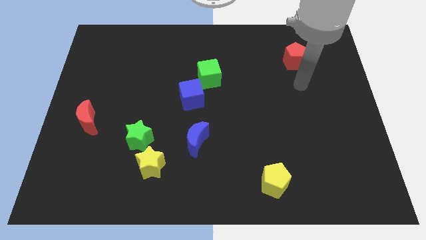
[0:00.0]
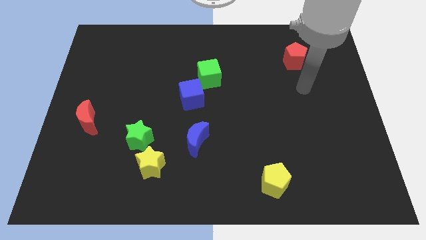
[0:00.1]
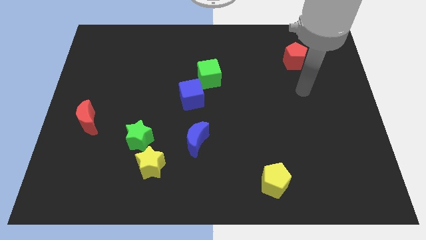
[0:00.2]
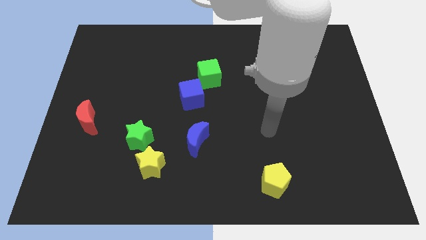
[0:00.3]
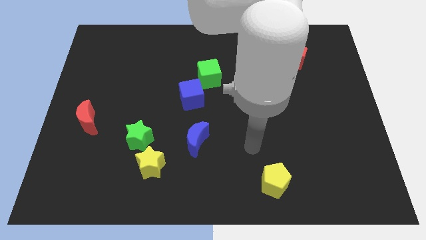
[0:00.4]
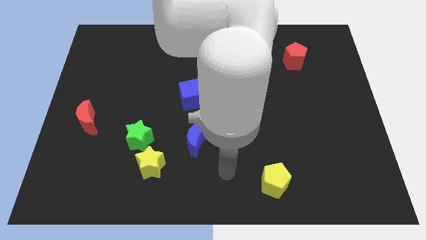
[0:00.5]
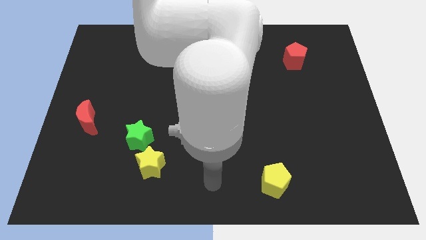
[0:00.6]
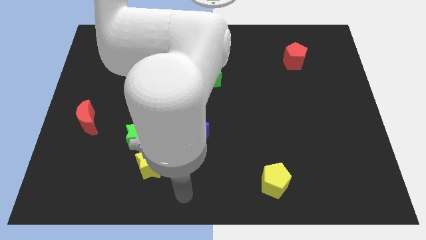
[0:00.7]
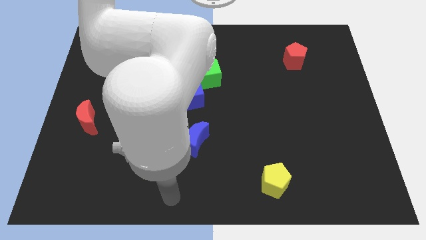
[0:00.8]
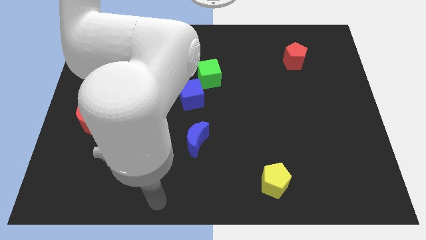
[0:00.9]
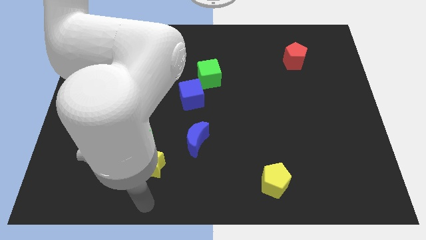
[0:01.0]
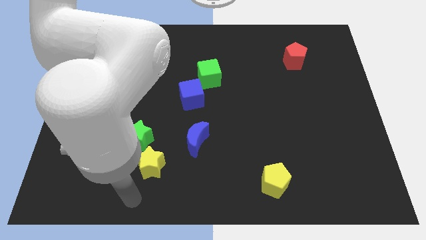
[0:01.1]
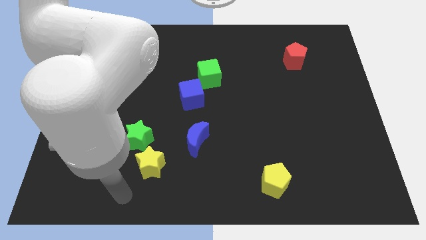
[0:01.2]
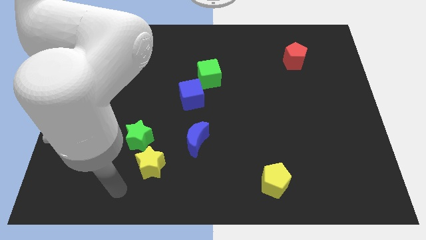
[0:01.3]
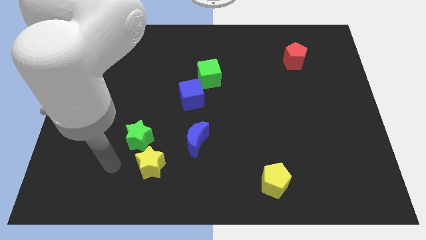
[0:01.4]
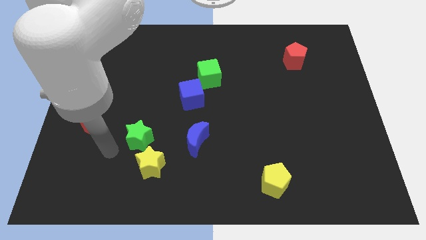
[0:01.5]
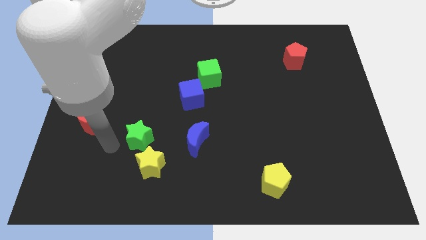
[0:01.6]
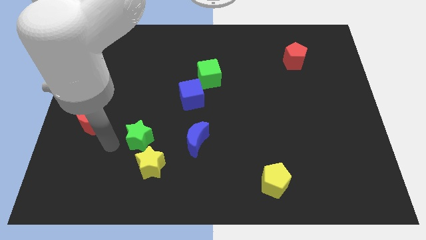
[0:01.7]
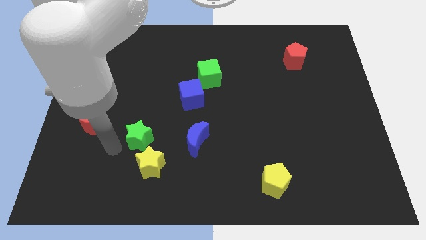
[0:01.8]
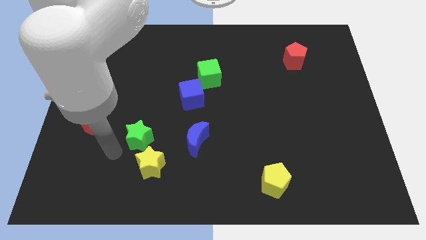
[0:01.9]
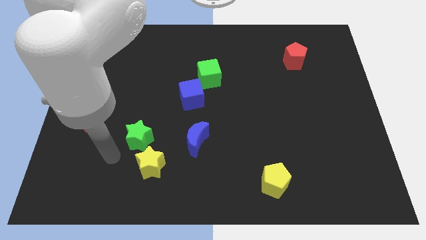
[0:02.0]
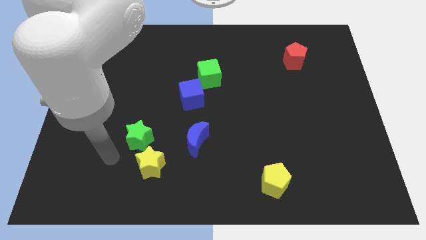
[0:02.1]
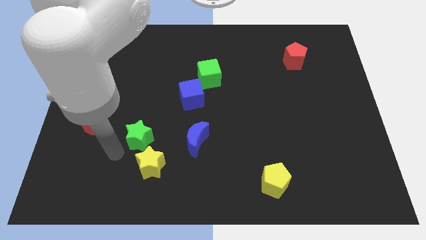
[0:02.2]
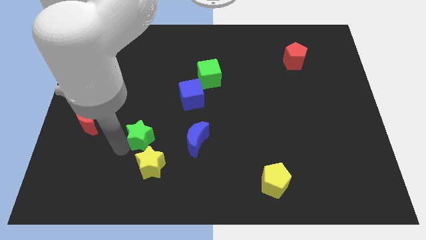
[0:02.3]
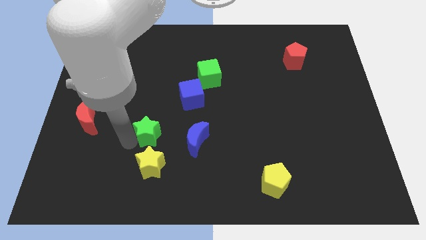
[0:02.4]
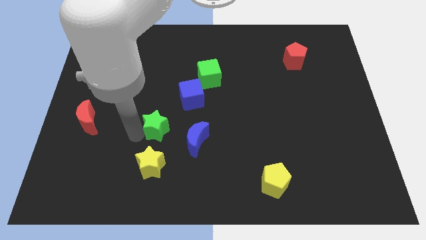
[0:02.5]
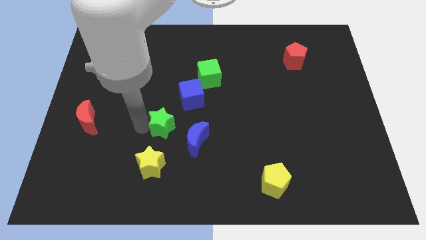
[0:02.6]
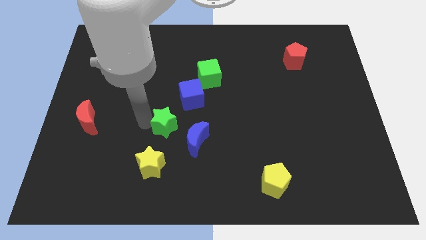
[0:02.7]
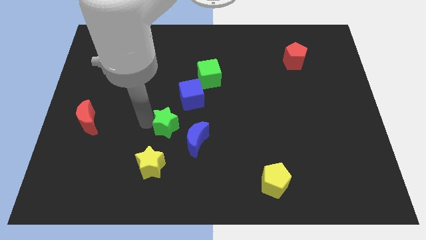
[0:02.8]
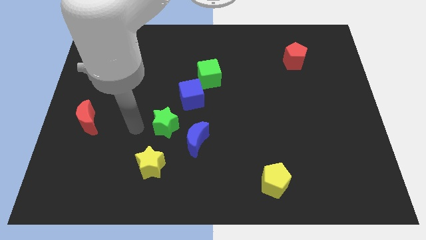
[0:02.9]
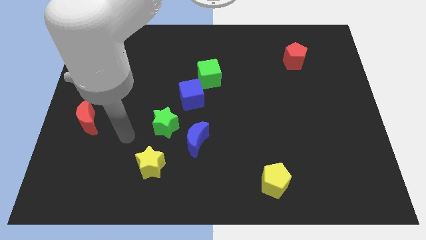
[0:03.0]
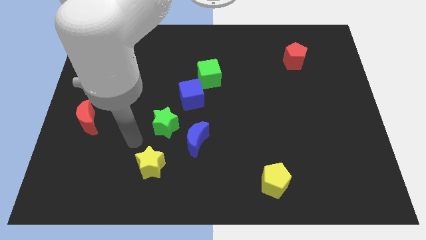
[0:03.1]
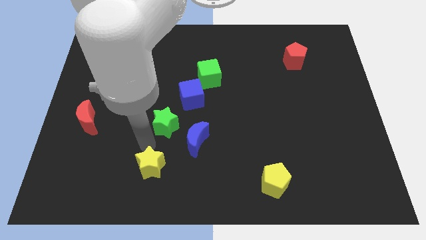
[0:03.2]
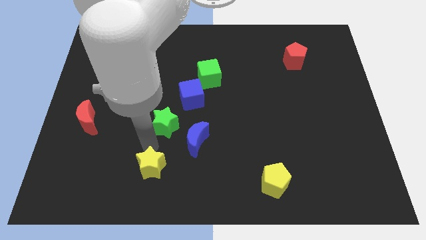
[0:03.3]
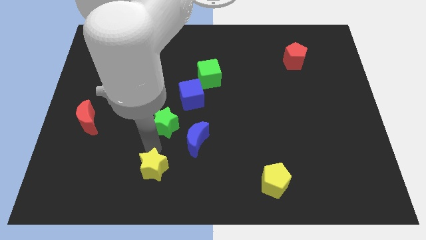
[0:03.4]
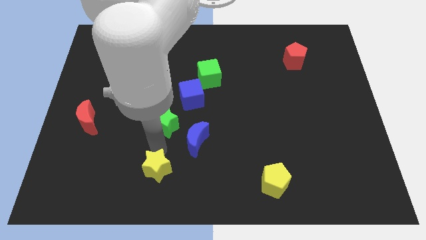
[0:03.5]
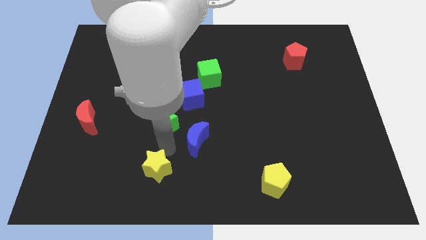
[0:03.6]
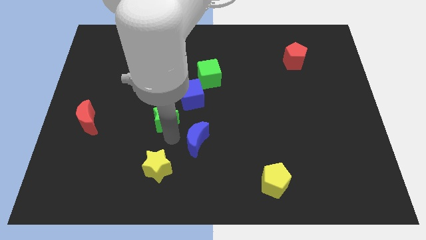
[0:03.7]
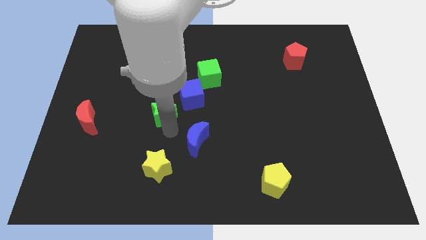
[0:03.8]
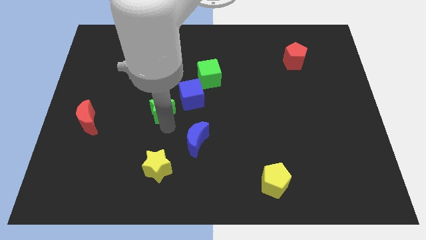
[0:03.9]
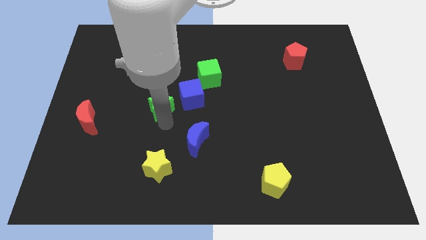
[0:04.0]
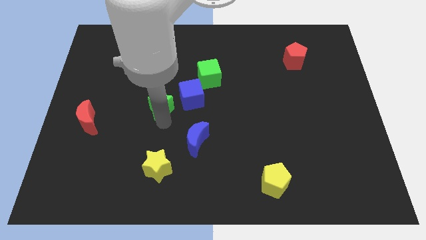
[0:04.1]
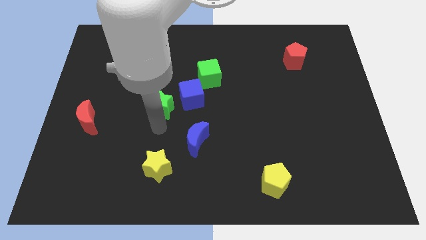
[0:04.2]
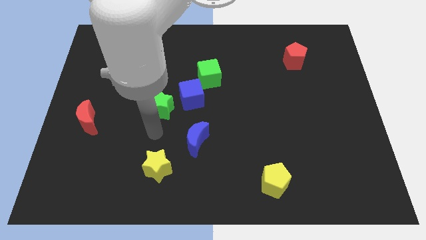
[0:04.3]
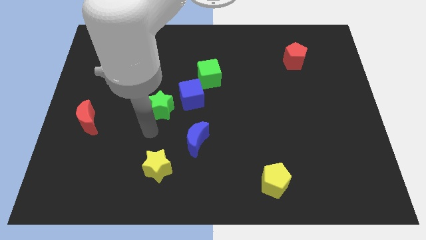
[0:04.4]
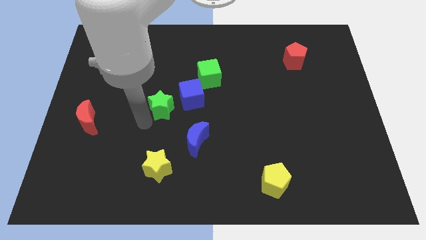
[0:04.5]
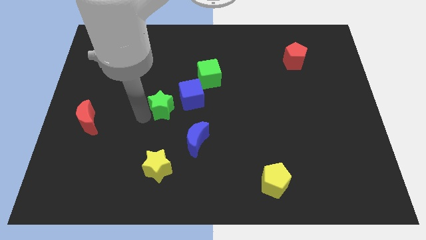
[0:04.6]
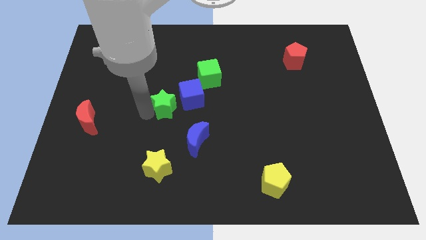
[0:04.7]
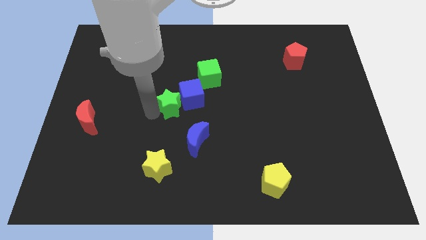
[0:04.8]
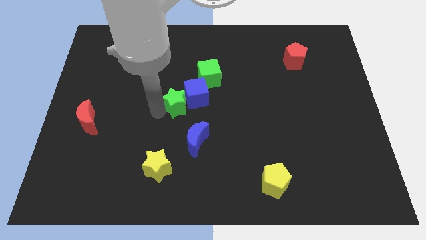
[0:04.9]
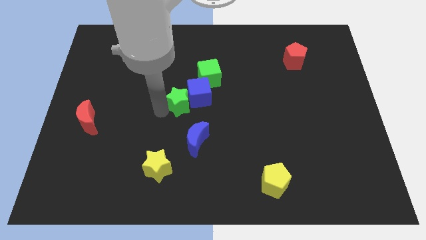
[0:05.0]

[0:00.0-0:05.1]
slide the green star next to the blue cube

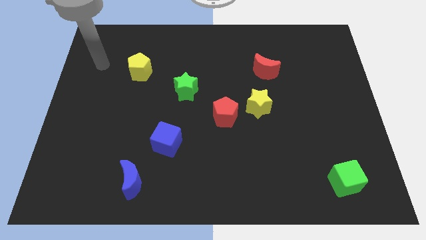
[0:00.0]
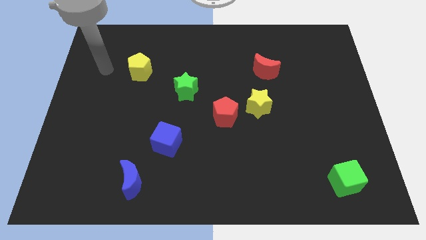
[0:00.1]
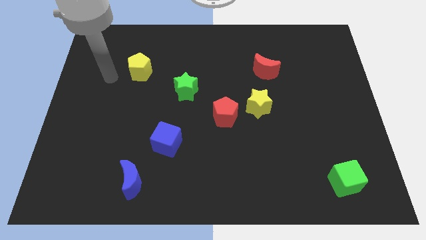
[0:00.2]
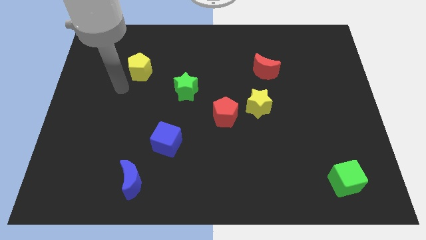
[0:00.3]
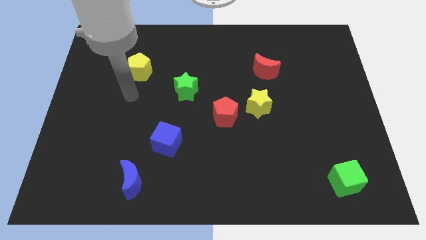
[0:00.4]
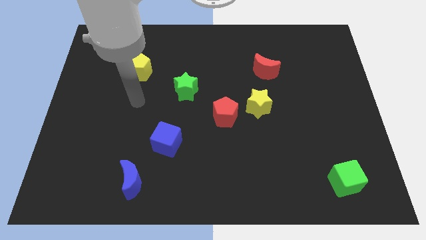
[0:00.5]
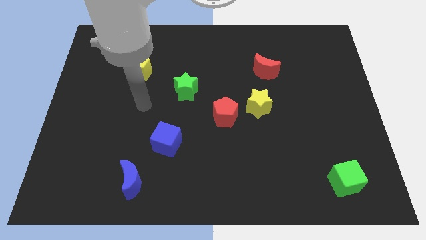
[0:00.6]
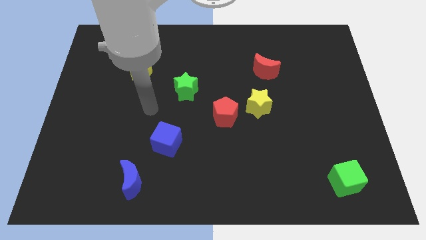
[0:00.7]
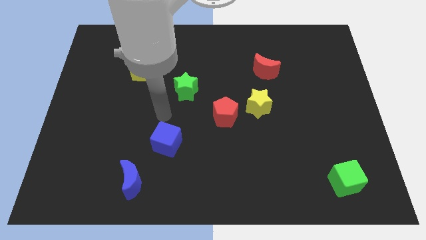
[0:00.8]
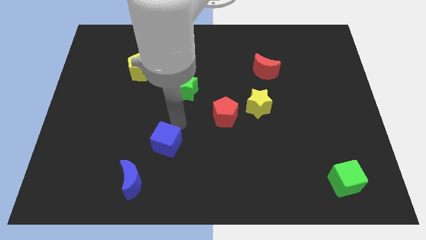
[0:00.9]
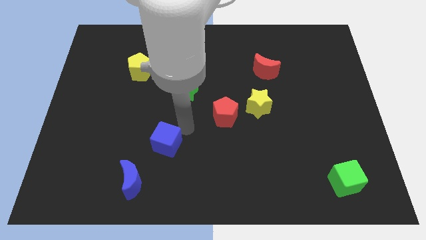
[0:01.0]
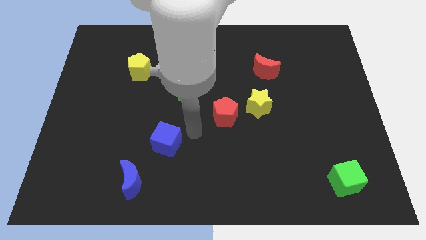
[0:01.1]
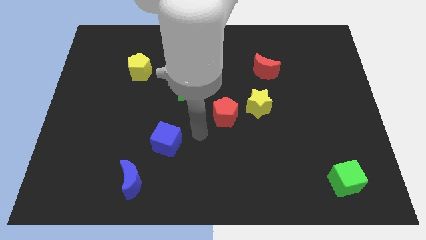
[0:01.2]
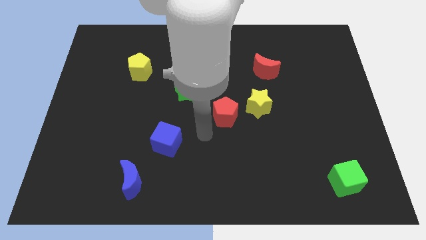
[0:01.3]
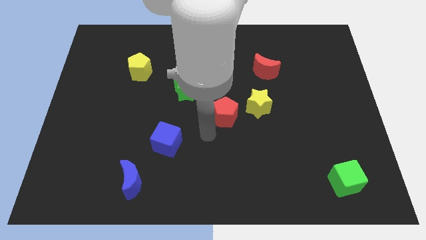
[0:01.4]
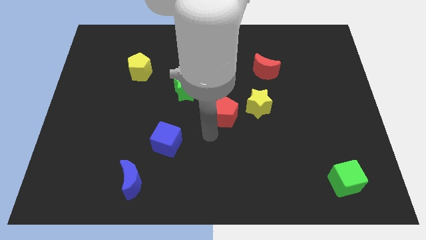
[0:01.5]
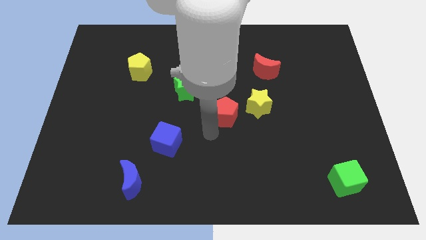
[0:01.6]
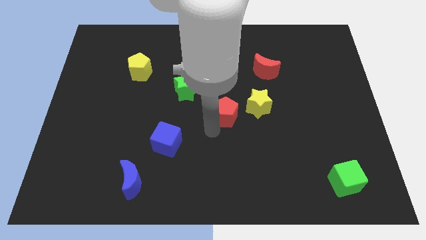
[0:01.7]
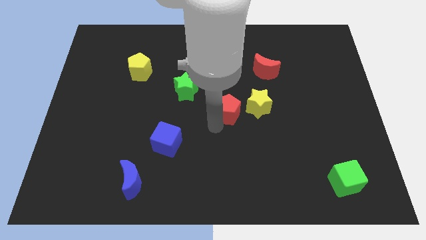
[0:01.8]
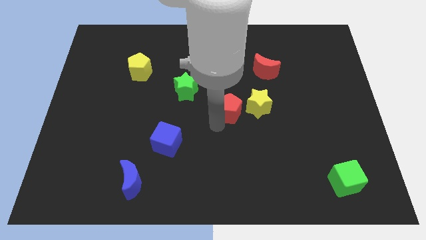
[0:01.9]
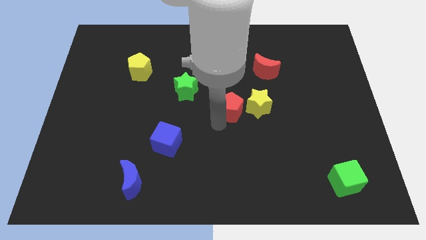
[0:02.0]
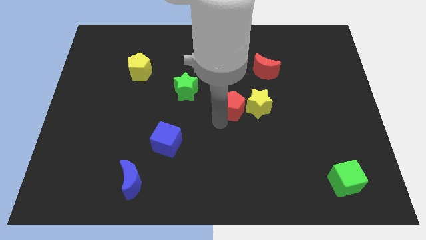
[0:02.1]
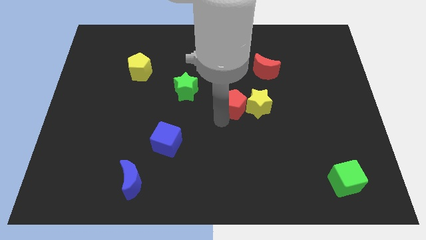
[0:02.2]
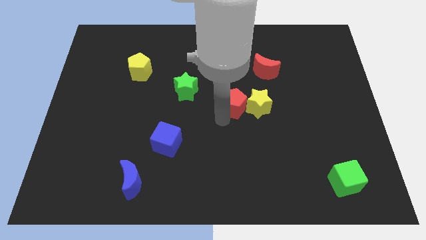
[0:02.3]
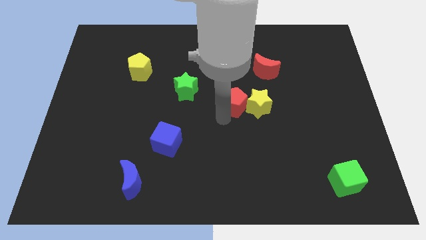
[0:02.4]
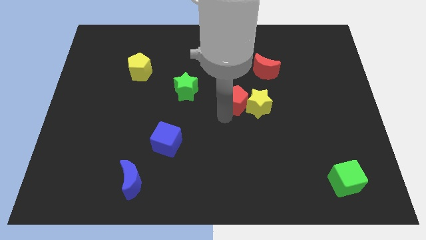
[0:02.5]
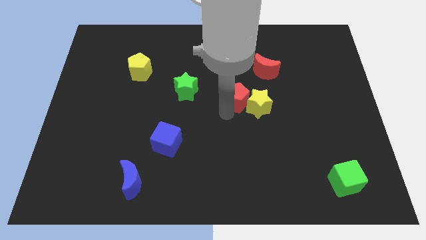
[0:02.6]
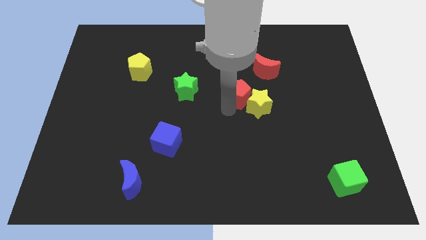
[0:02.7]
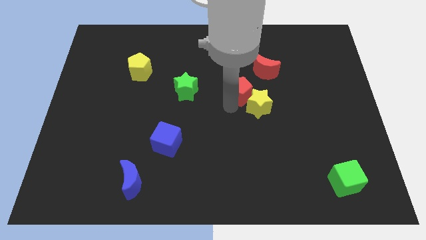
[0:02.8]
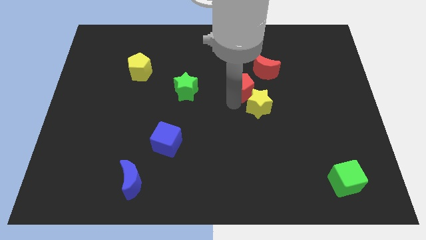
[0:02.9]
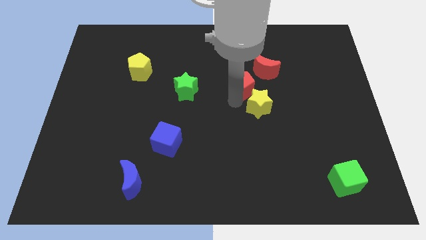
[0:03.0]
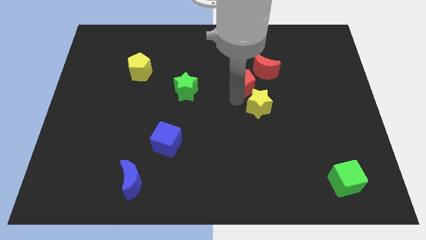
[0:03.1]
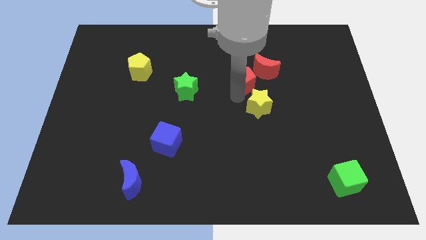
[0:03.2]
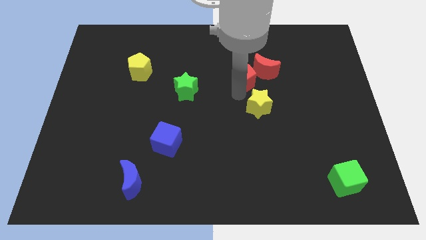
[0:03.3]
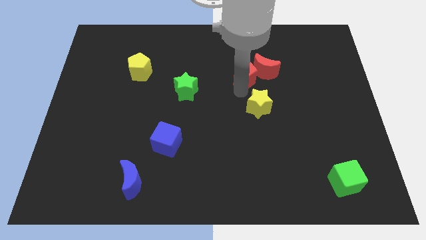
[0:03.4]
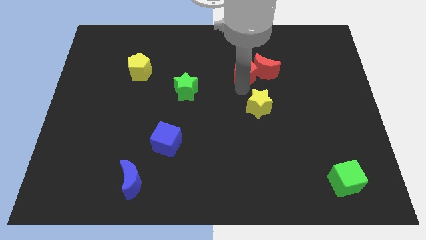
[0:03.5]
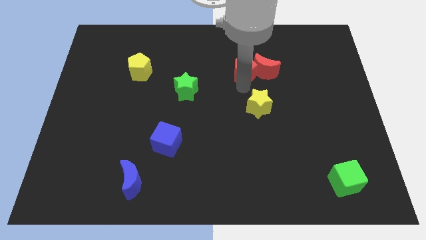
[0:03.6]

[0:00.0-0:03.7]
slide the red pentagon next to the red moon
